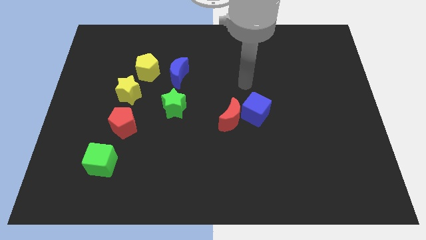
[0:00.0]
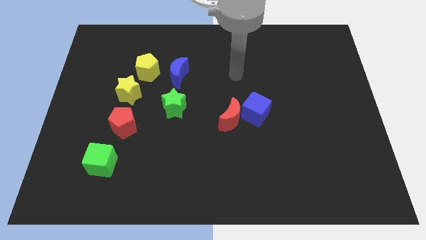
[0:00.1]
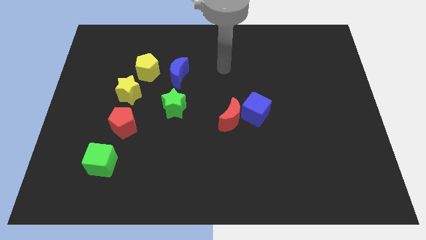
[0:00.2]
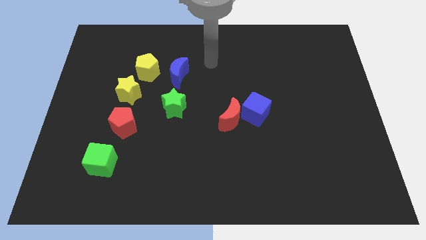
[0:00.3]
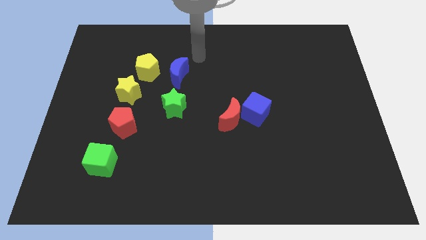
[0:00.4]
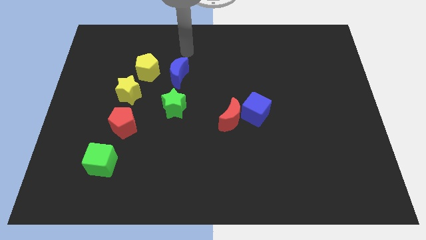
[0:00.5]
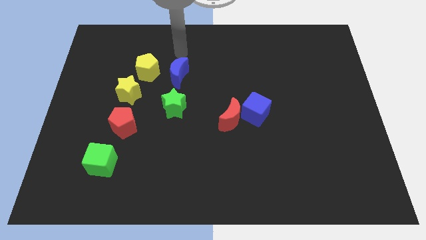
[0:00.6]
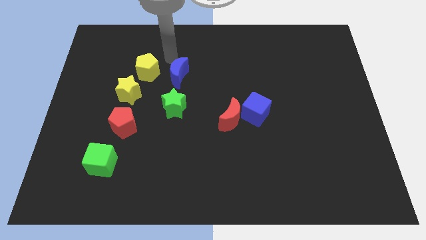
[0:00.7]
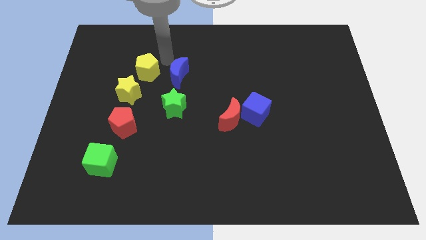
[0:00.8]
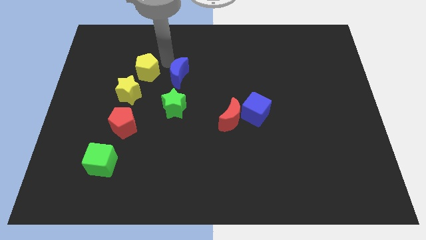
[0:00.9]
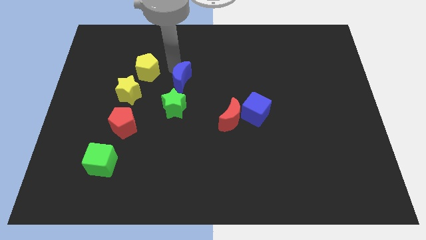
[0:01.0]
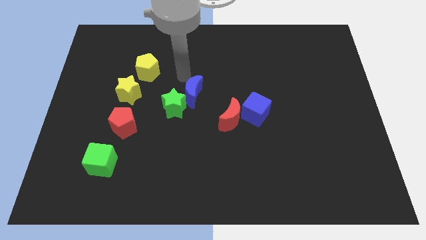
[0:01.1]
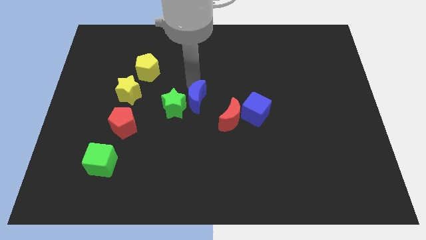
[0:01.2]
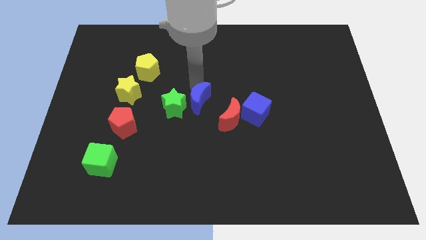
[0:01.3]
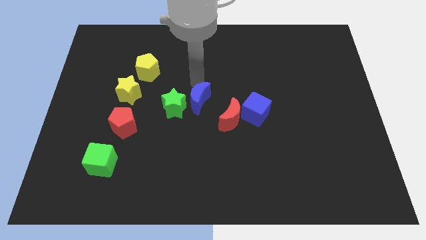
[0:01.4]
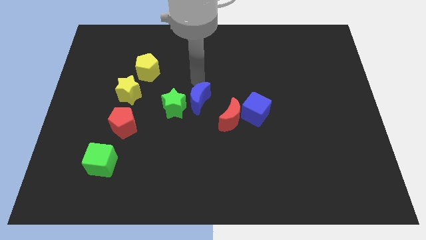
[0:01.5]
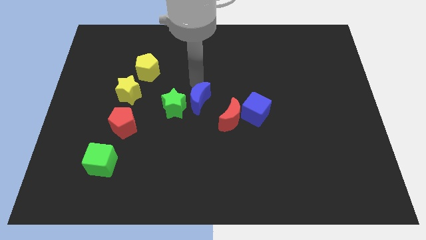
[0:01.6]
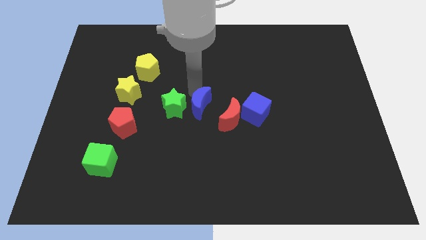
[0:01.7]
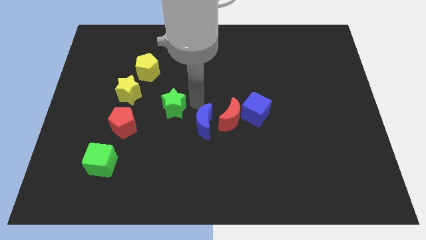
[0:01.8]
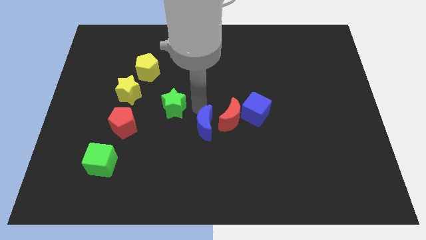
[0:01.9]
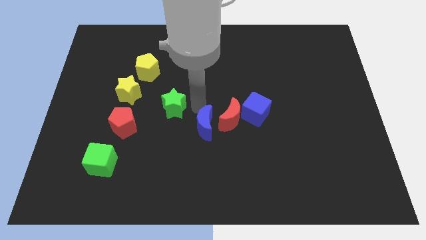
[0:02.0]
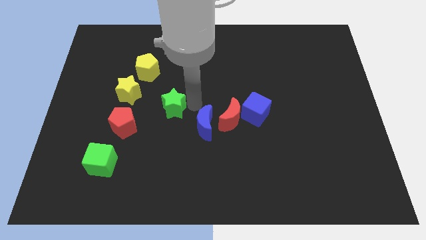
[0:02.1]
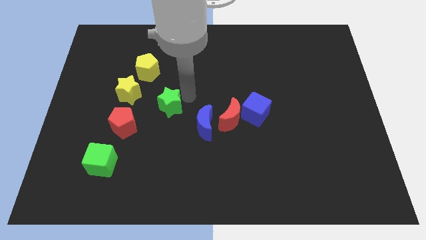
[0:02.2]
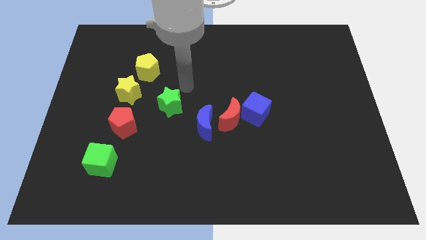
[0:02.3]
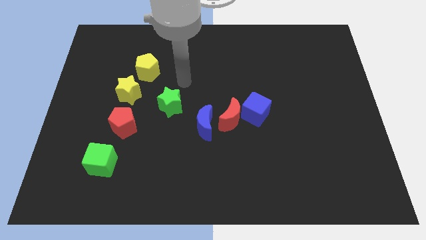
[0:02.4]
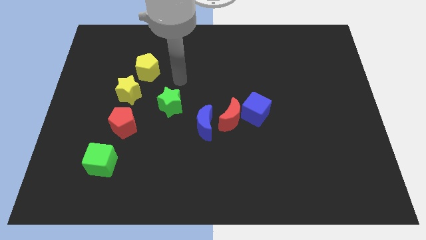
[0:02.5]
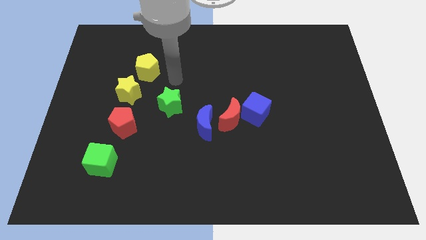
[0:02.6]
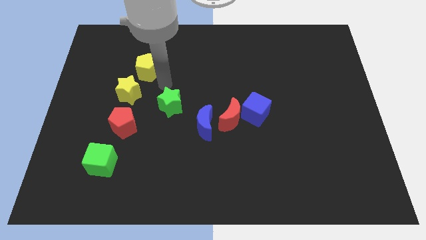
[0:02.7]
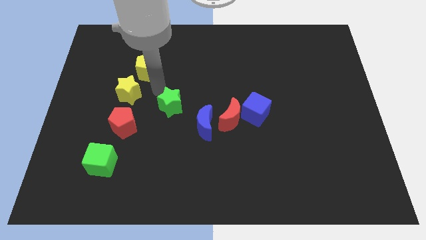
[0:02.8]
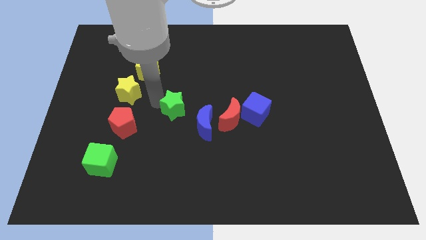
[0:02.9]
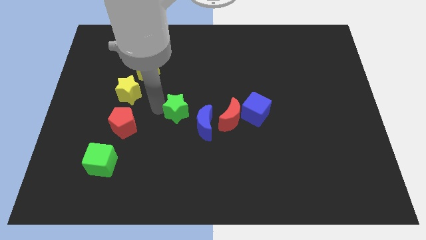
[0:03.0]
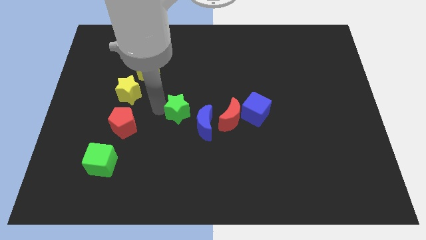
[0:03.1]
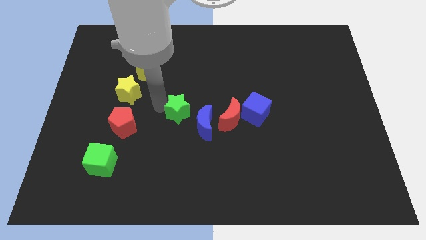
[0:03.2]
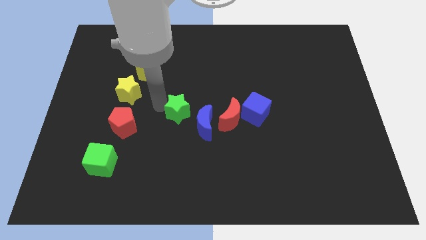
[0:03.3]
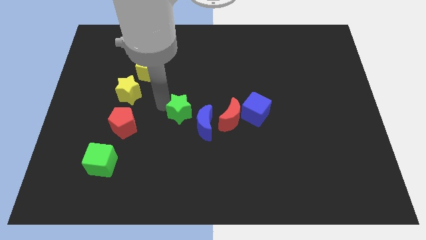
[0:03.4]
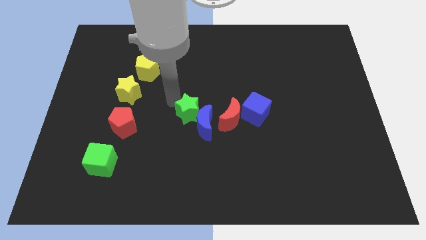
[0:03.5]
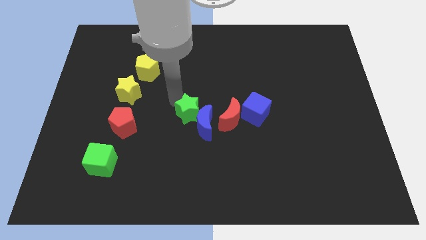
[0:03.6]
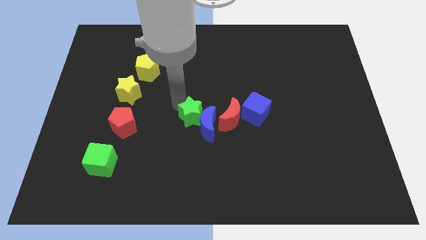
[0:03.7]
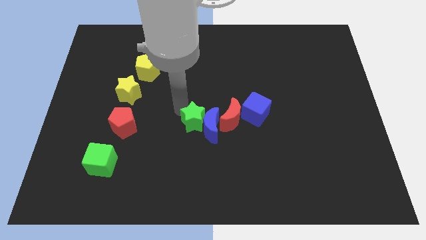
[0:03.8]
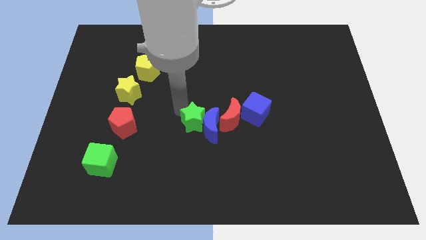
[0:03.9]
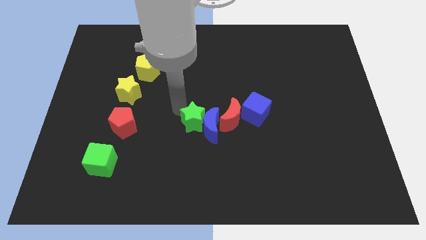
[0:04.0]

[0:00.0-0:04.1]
drag the blue crescent and green star into the left side of the red moon

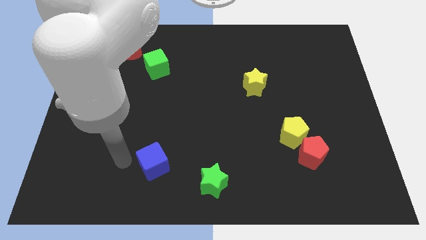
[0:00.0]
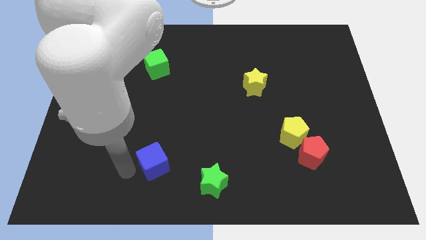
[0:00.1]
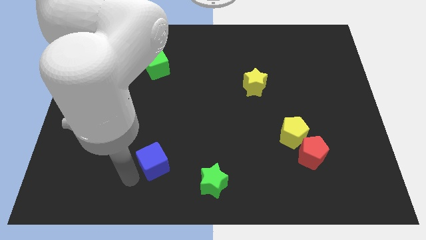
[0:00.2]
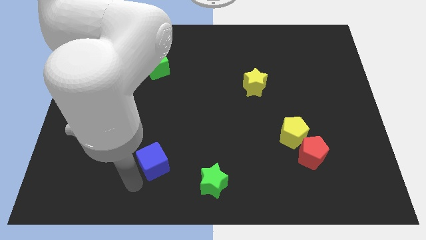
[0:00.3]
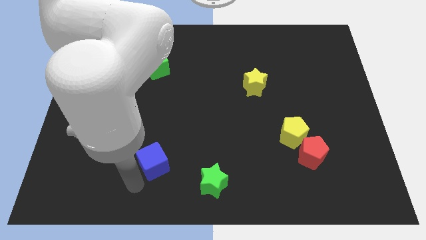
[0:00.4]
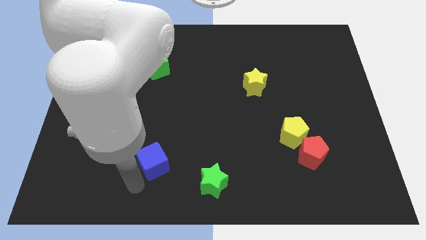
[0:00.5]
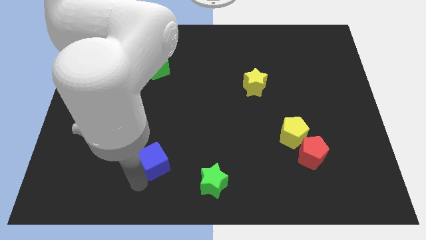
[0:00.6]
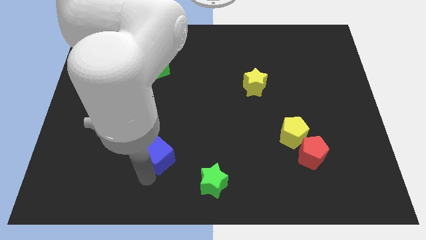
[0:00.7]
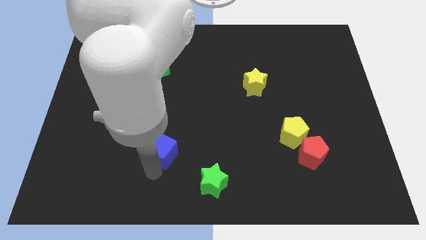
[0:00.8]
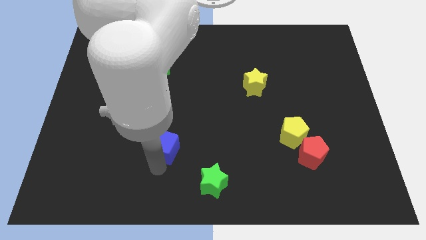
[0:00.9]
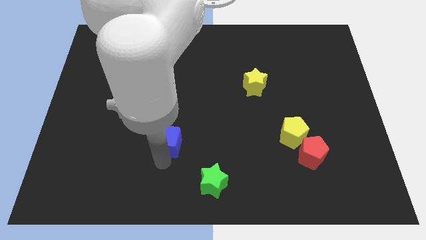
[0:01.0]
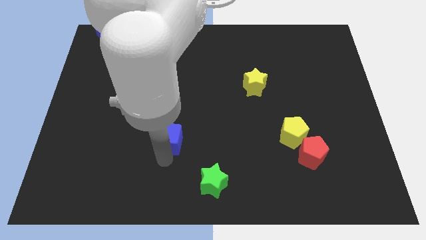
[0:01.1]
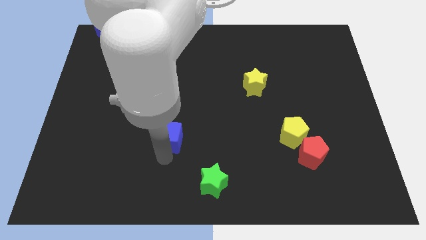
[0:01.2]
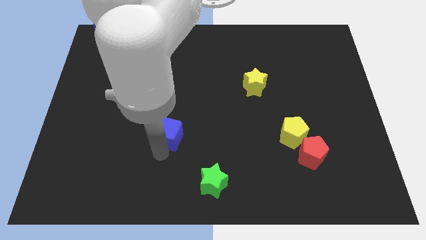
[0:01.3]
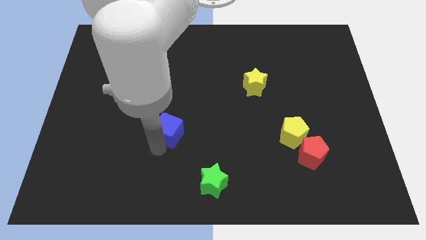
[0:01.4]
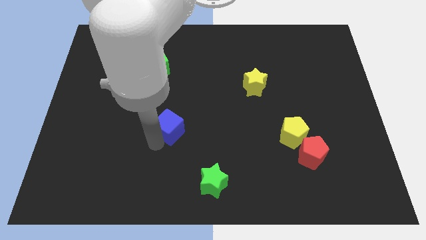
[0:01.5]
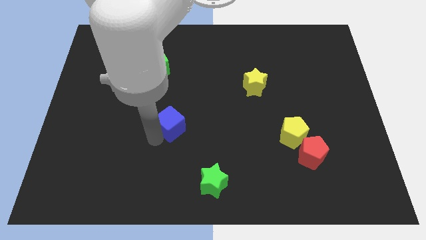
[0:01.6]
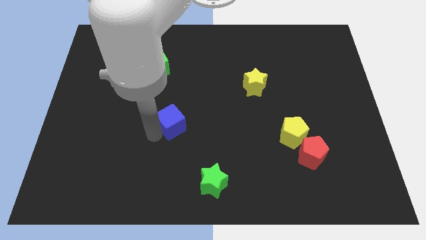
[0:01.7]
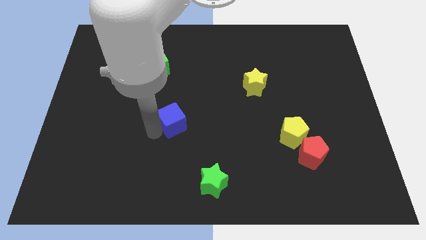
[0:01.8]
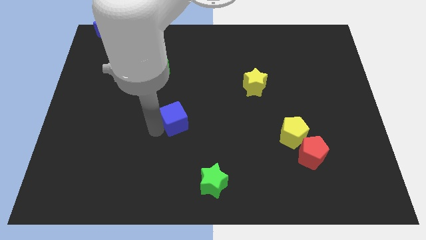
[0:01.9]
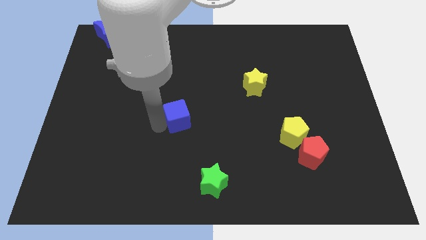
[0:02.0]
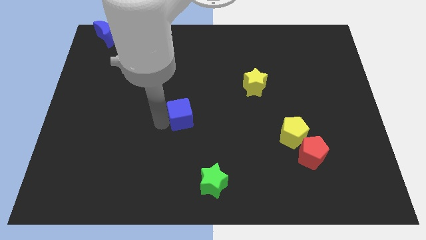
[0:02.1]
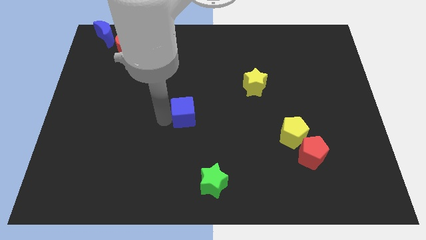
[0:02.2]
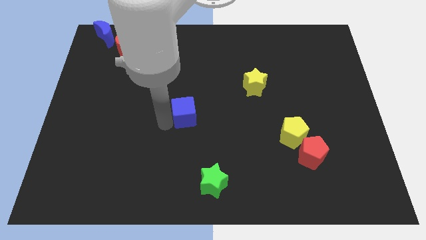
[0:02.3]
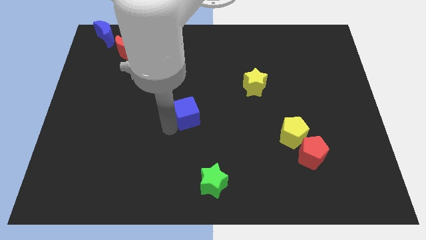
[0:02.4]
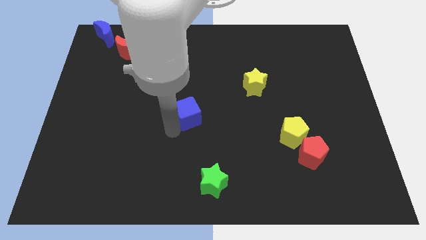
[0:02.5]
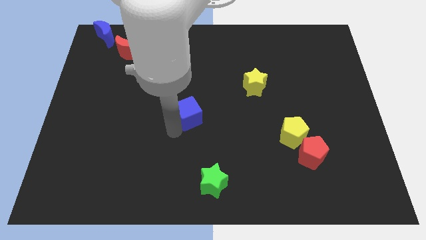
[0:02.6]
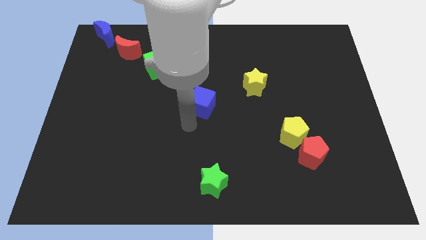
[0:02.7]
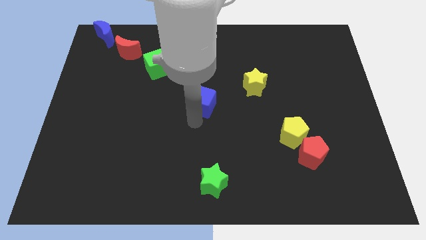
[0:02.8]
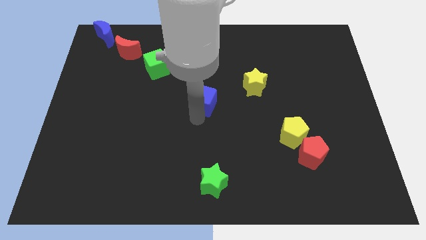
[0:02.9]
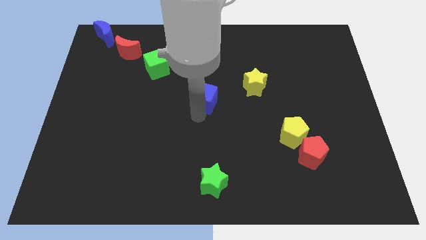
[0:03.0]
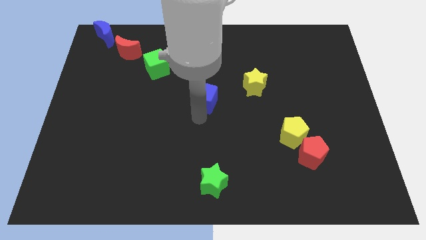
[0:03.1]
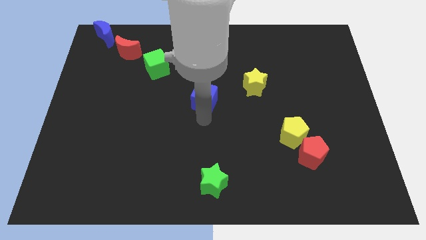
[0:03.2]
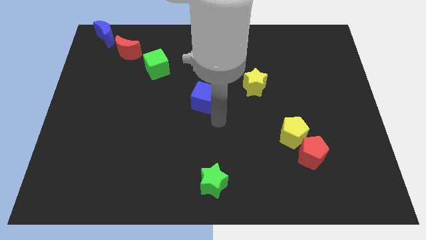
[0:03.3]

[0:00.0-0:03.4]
push blue cube vertically above green star

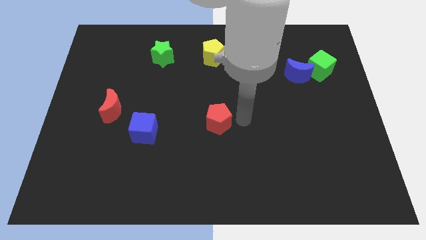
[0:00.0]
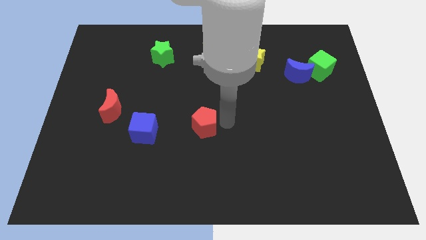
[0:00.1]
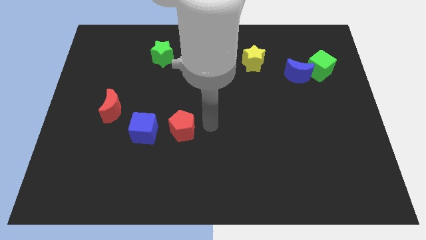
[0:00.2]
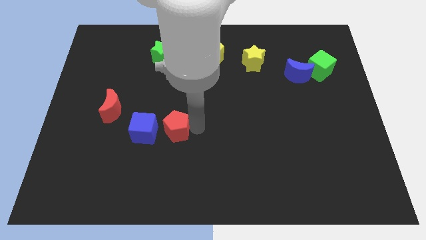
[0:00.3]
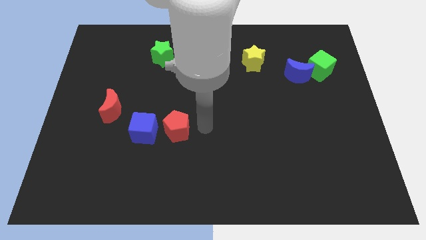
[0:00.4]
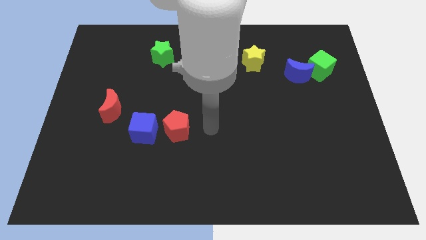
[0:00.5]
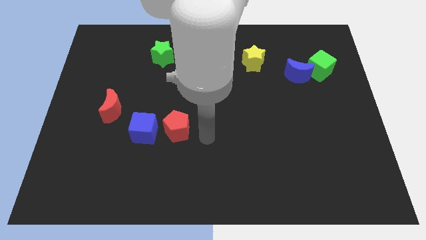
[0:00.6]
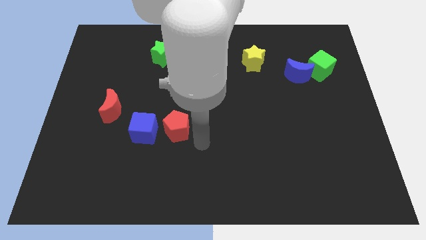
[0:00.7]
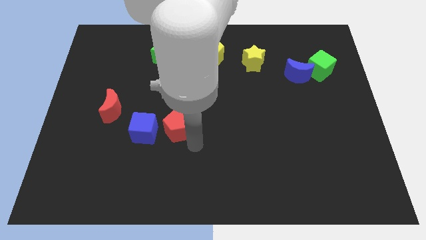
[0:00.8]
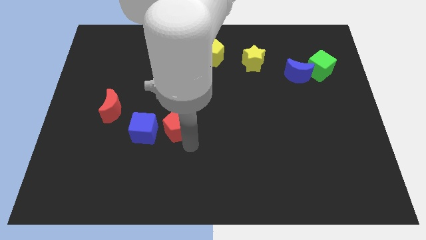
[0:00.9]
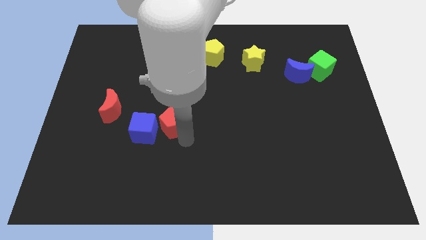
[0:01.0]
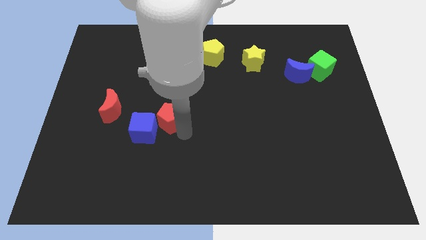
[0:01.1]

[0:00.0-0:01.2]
push the red pentagon to the right of the blue cube

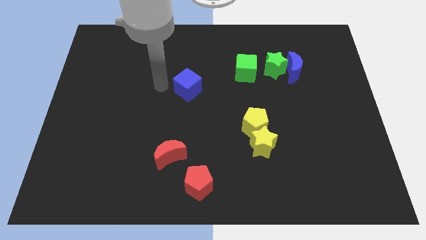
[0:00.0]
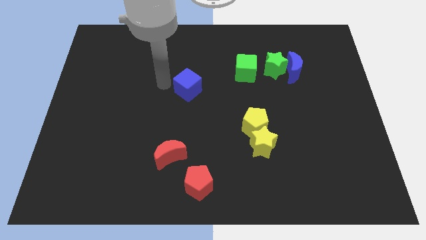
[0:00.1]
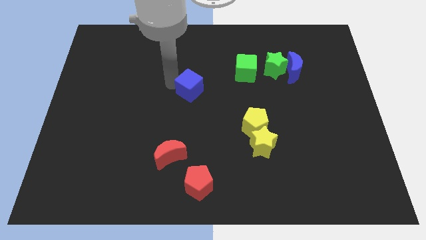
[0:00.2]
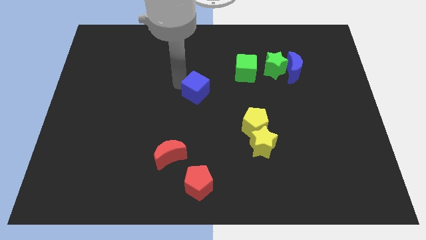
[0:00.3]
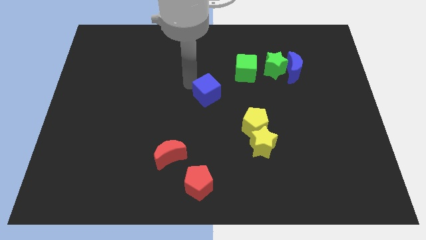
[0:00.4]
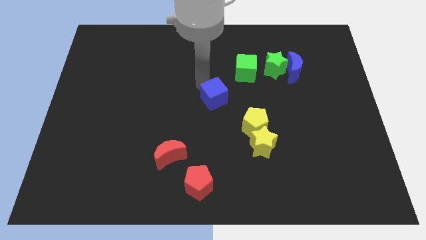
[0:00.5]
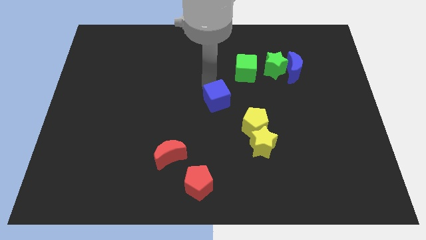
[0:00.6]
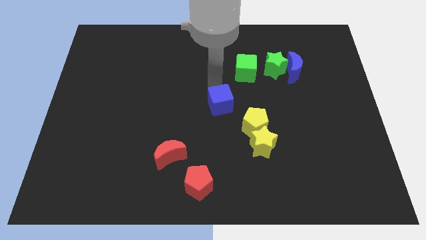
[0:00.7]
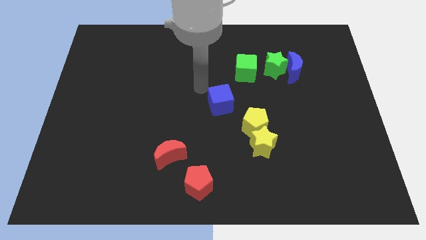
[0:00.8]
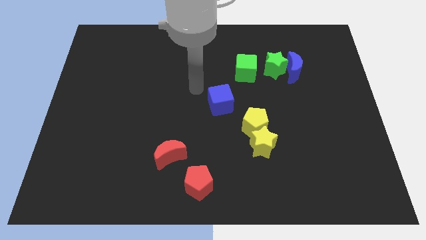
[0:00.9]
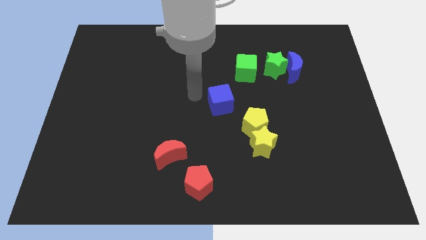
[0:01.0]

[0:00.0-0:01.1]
move the blue cube to the center of the board
